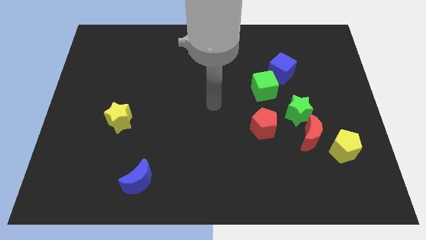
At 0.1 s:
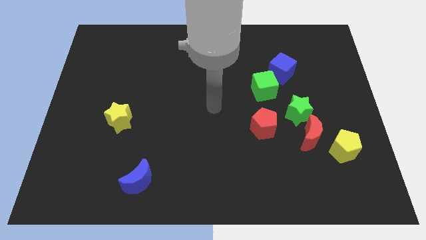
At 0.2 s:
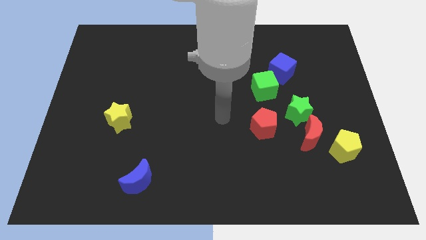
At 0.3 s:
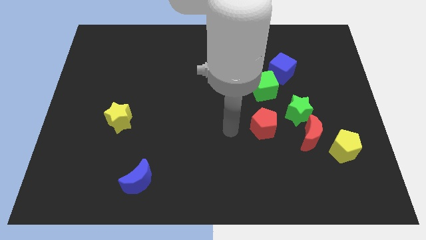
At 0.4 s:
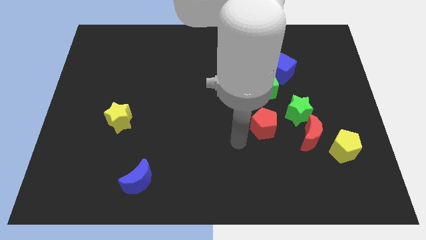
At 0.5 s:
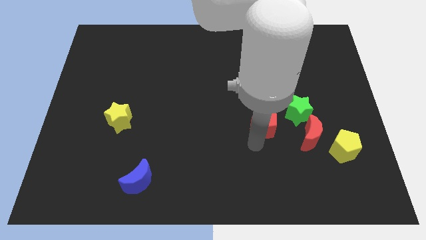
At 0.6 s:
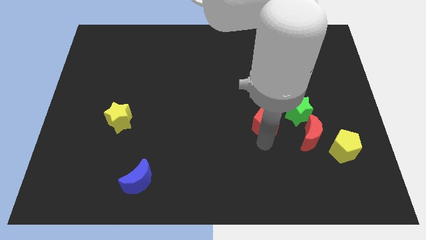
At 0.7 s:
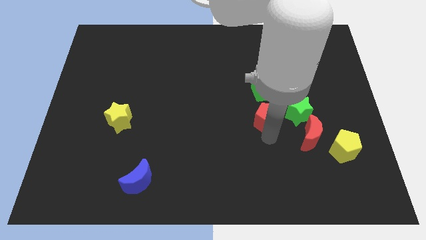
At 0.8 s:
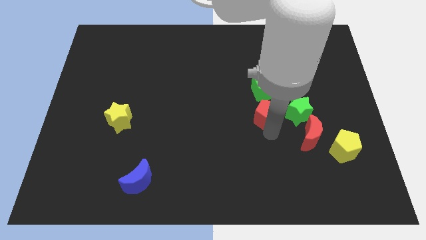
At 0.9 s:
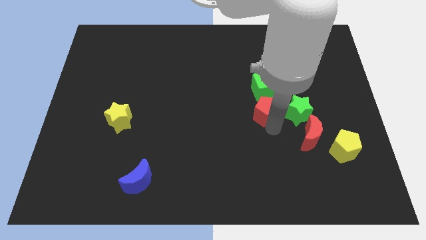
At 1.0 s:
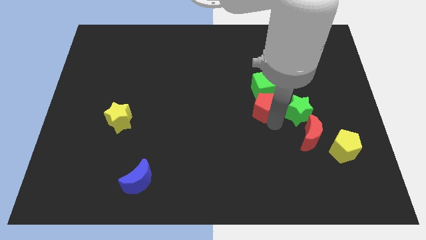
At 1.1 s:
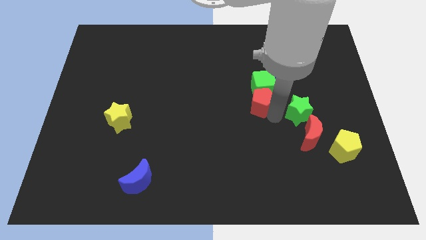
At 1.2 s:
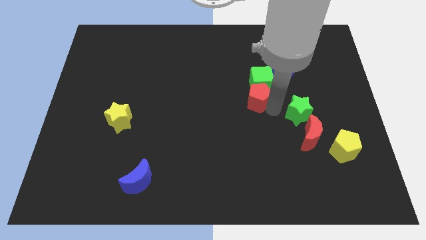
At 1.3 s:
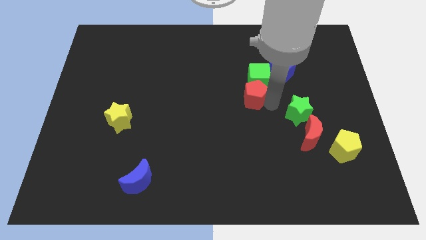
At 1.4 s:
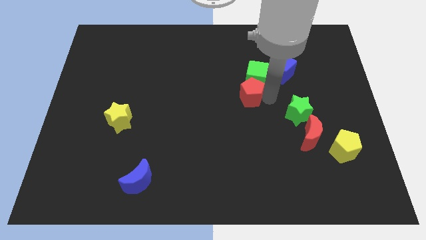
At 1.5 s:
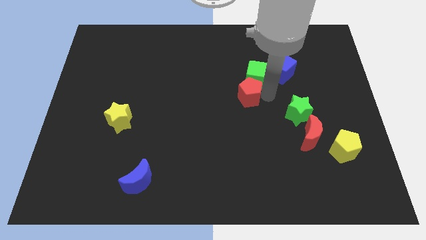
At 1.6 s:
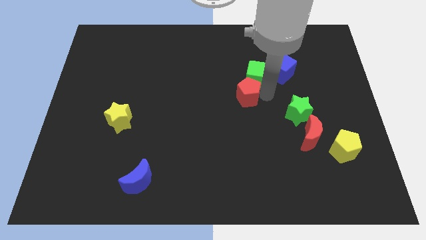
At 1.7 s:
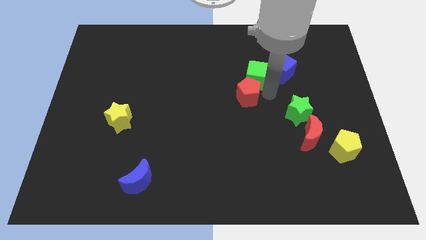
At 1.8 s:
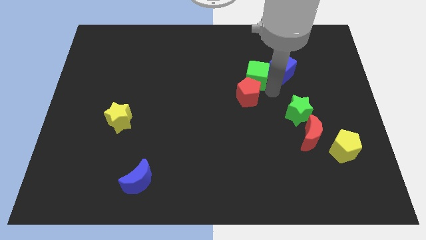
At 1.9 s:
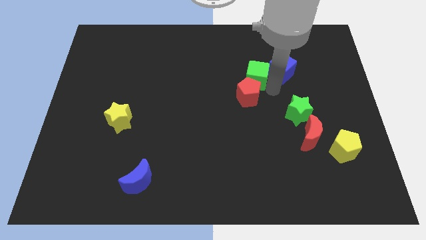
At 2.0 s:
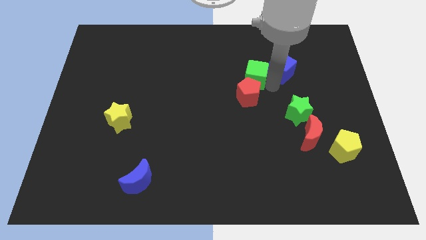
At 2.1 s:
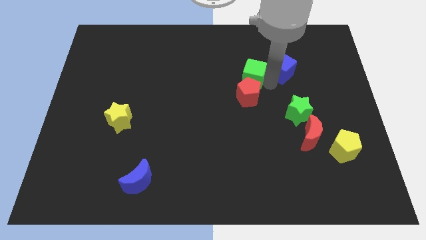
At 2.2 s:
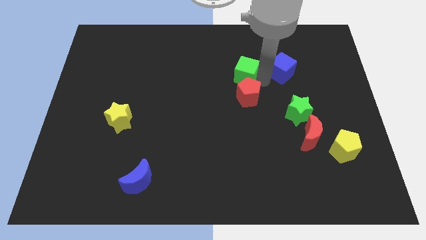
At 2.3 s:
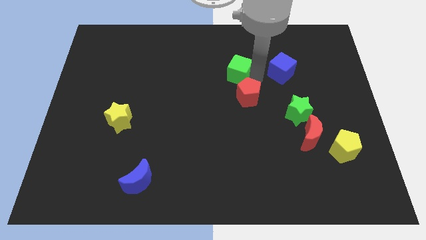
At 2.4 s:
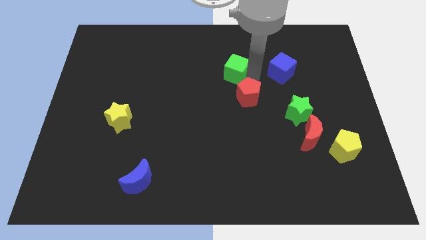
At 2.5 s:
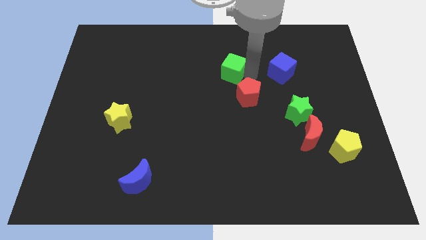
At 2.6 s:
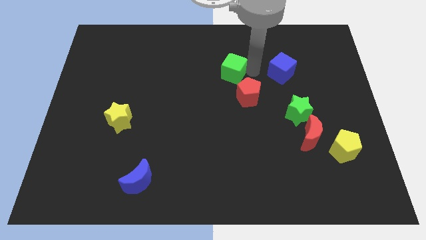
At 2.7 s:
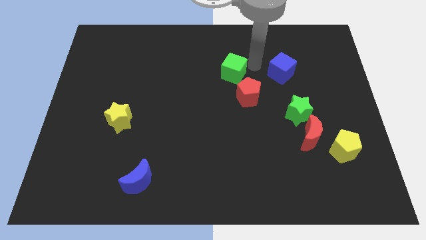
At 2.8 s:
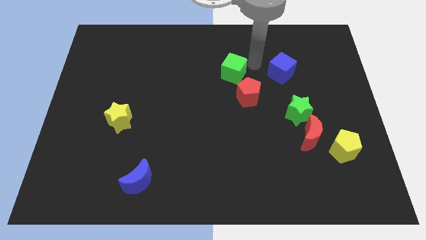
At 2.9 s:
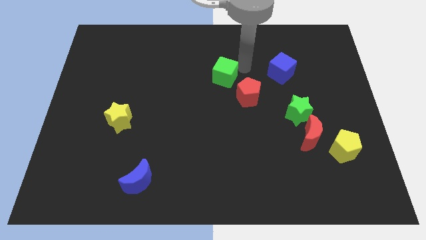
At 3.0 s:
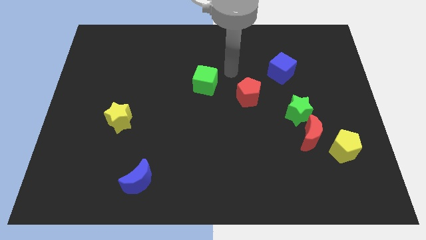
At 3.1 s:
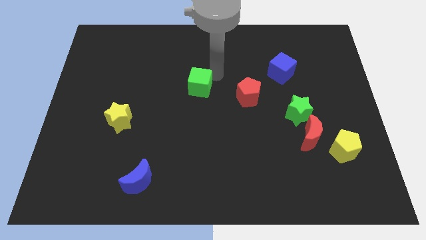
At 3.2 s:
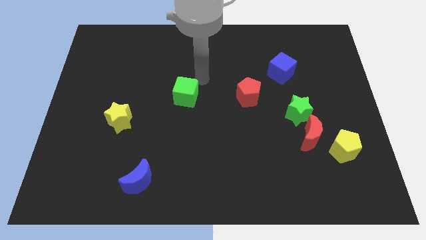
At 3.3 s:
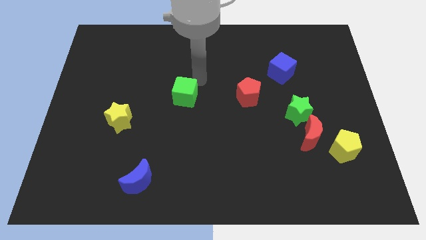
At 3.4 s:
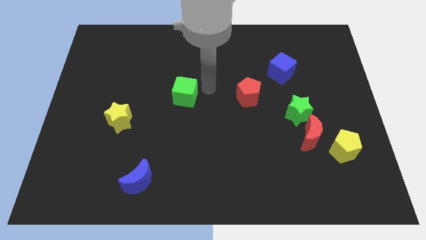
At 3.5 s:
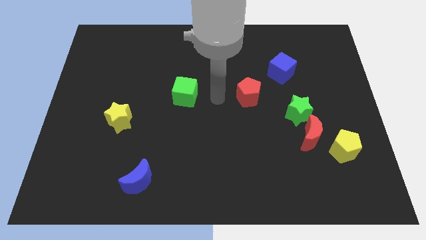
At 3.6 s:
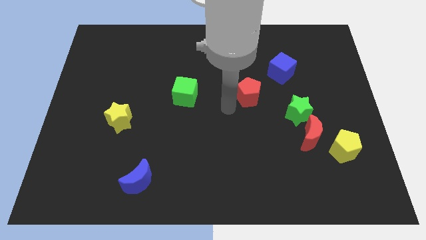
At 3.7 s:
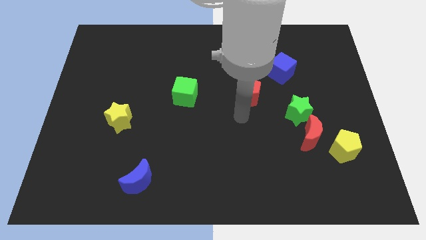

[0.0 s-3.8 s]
slide the green cube horizontally on the left side of the red pentagon

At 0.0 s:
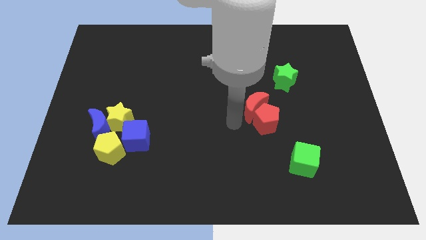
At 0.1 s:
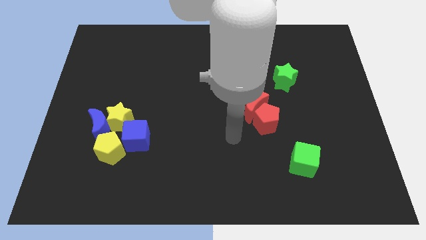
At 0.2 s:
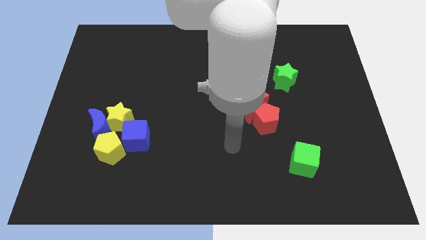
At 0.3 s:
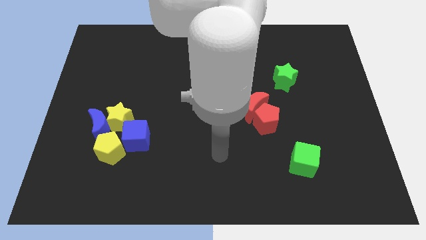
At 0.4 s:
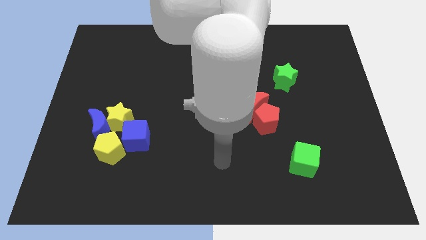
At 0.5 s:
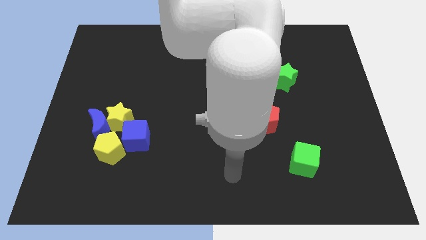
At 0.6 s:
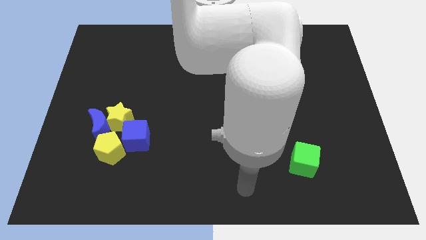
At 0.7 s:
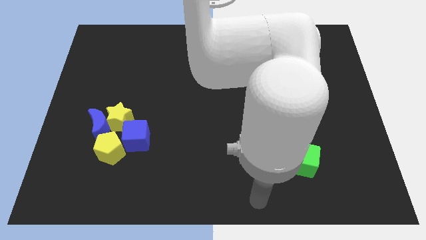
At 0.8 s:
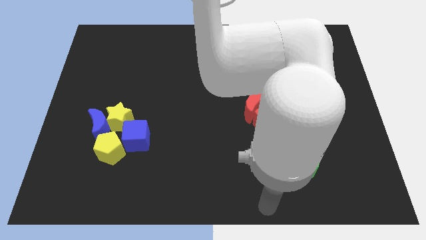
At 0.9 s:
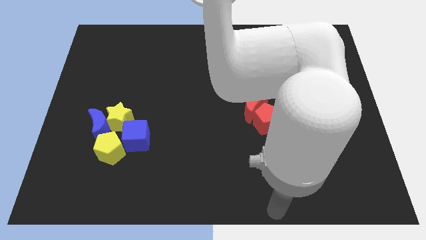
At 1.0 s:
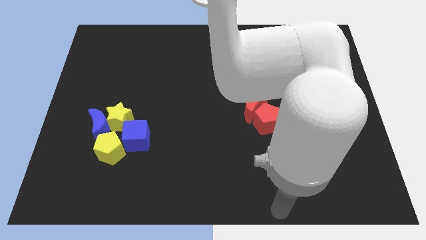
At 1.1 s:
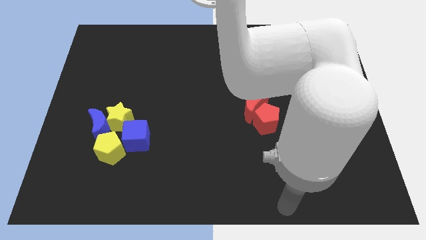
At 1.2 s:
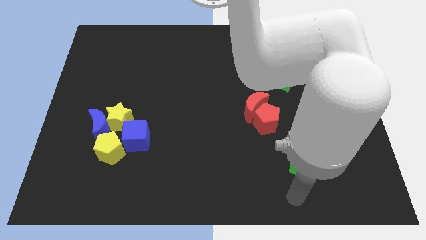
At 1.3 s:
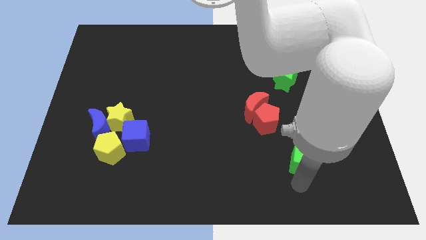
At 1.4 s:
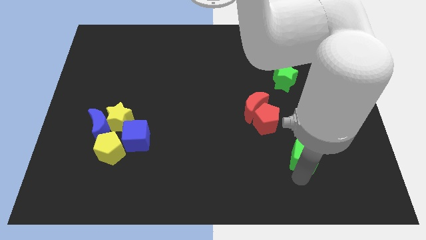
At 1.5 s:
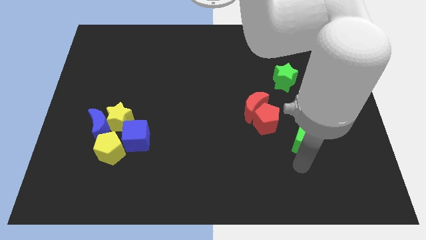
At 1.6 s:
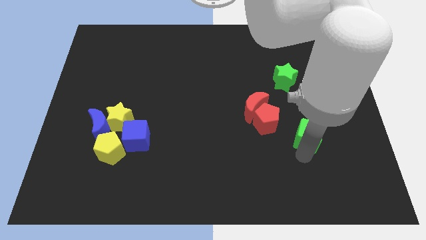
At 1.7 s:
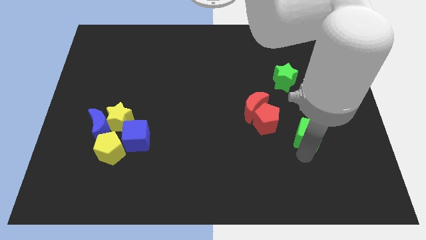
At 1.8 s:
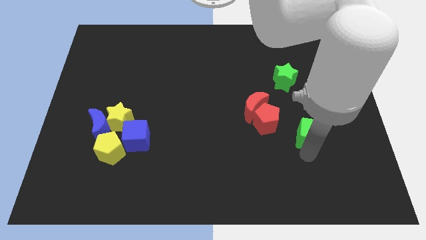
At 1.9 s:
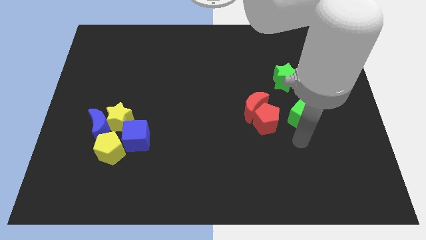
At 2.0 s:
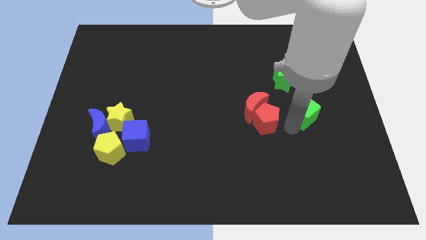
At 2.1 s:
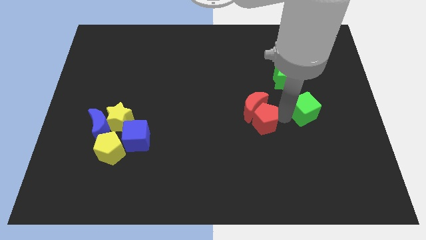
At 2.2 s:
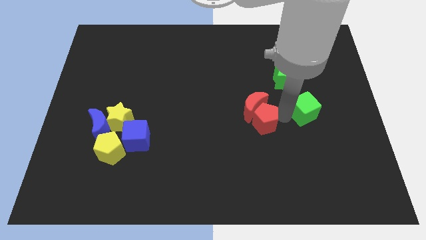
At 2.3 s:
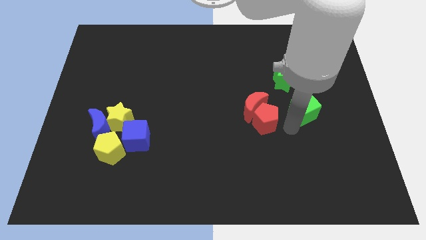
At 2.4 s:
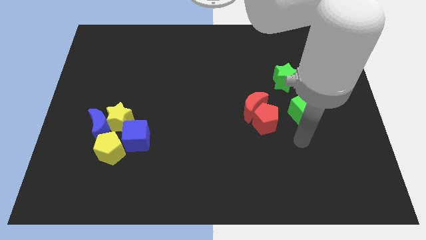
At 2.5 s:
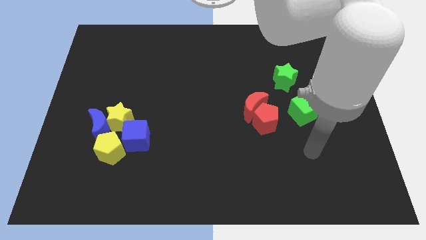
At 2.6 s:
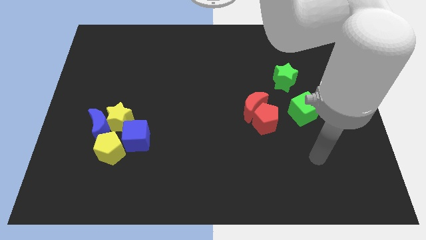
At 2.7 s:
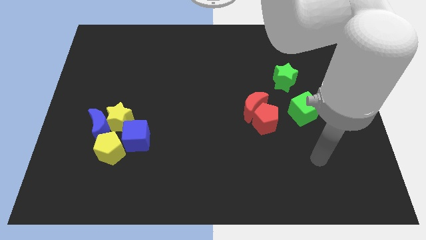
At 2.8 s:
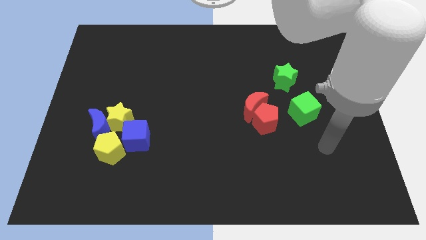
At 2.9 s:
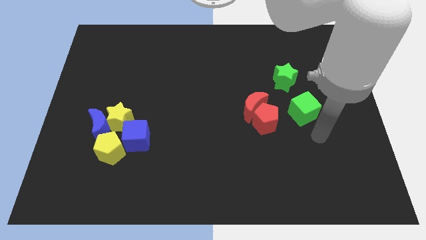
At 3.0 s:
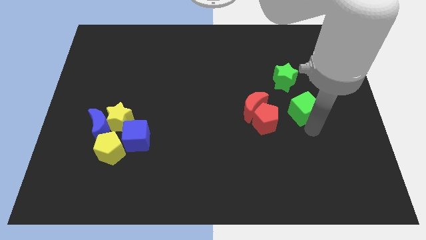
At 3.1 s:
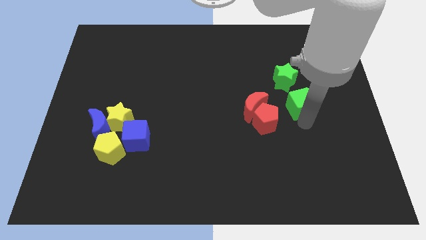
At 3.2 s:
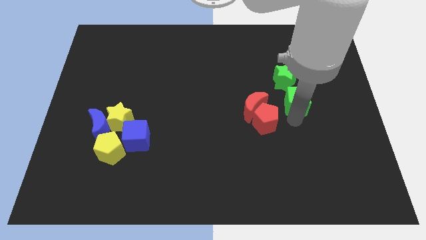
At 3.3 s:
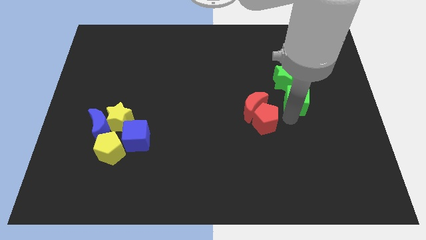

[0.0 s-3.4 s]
push the green cube into the green star

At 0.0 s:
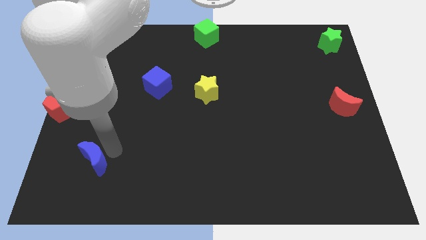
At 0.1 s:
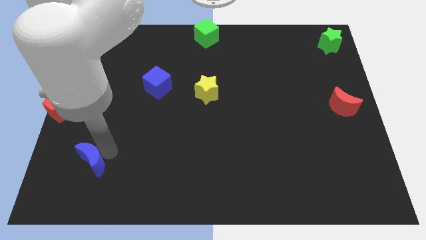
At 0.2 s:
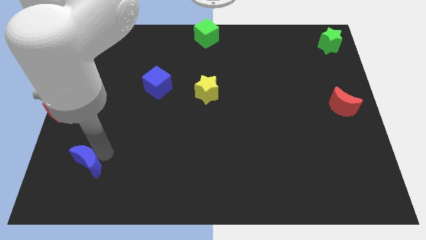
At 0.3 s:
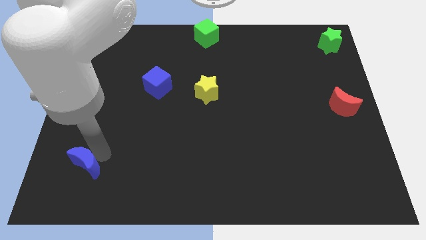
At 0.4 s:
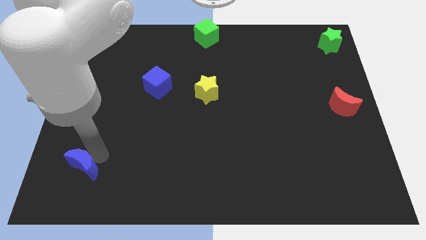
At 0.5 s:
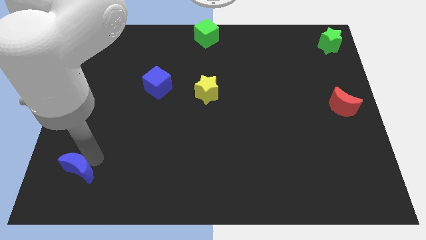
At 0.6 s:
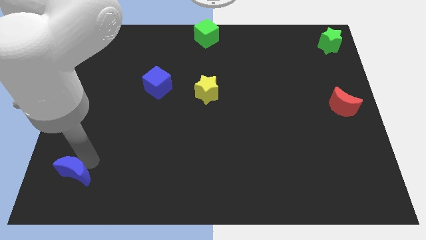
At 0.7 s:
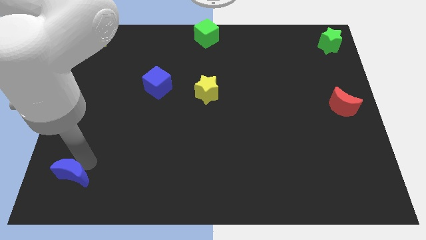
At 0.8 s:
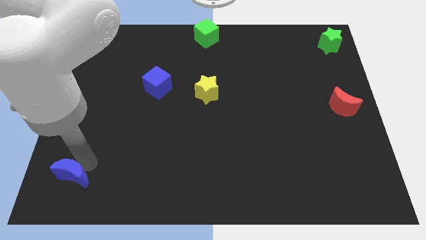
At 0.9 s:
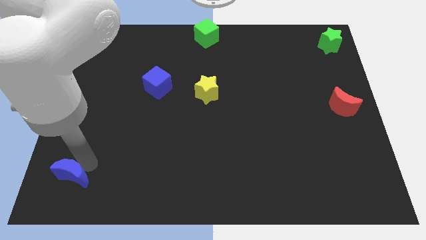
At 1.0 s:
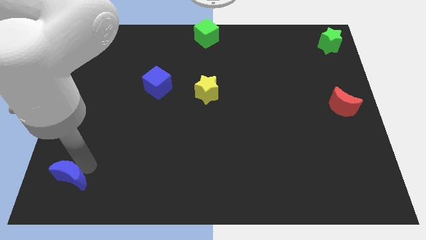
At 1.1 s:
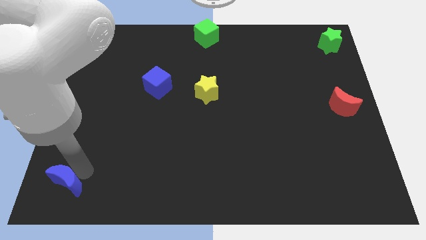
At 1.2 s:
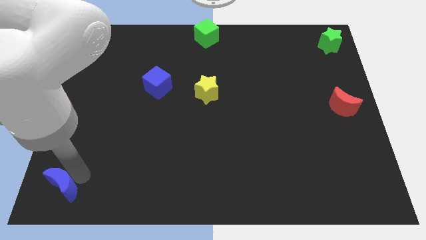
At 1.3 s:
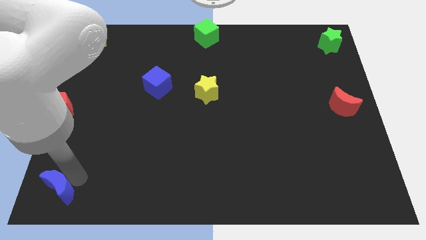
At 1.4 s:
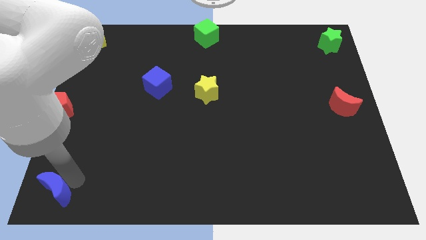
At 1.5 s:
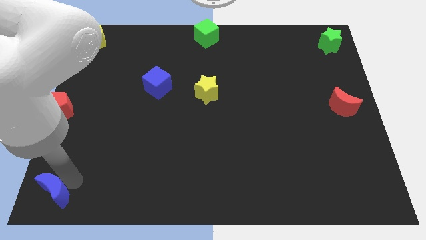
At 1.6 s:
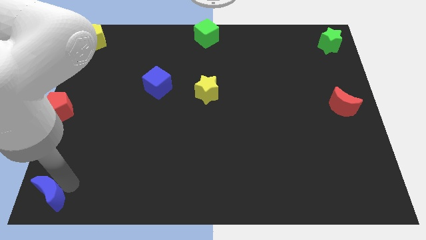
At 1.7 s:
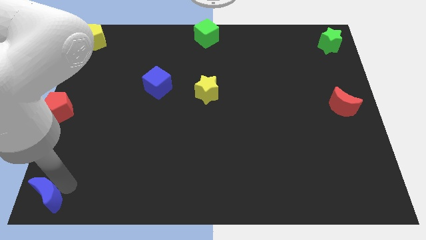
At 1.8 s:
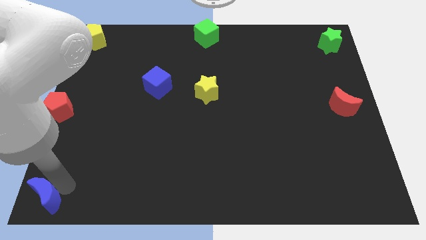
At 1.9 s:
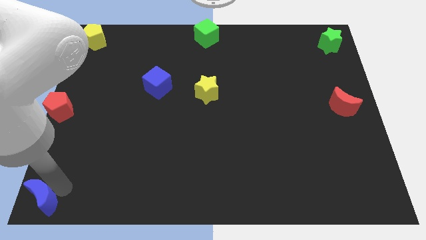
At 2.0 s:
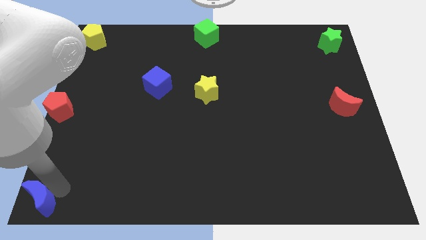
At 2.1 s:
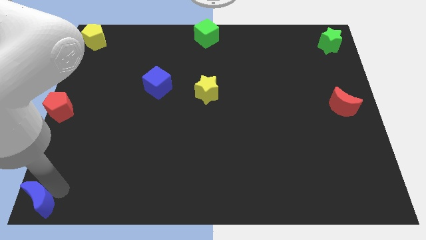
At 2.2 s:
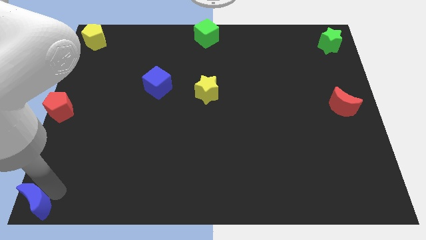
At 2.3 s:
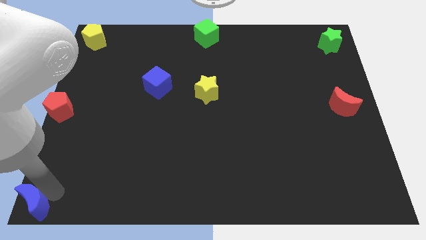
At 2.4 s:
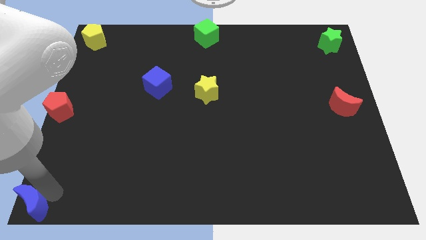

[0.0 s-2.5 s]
move the blue crescent to bottom left corner
